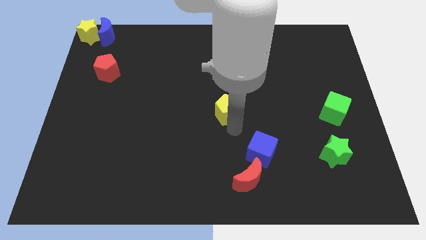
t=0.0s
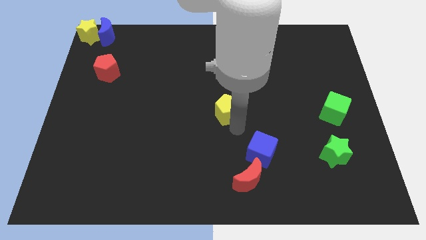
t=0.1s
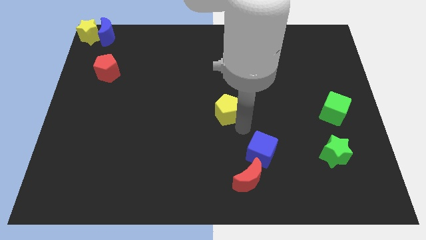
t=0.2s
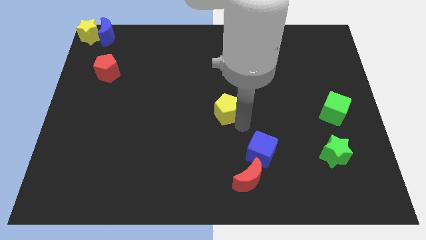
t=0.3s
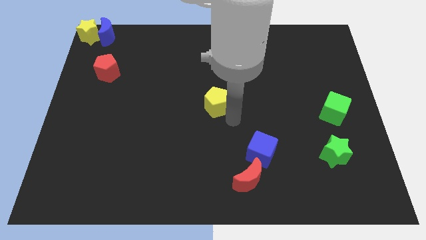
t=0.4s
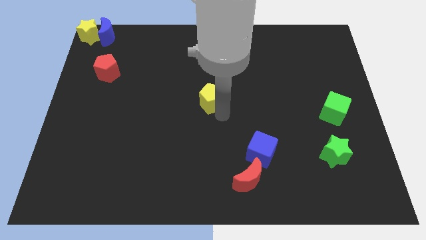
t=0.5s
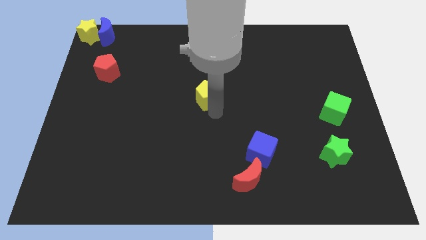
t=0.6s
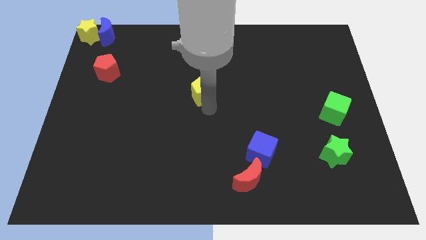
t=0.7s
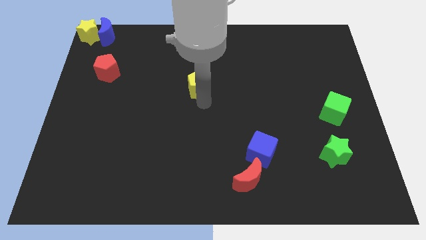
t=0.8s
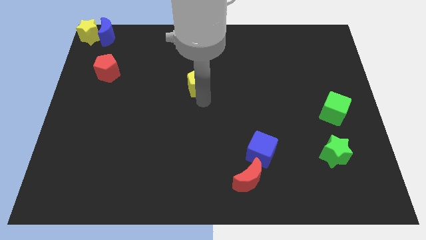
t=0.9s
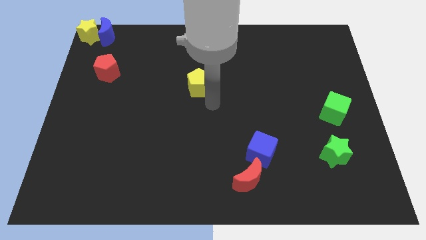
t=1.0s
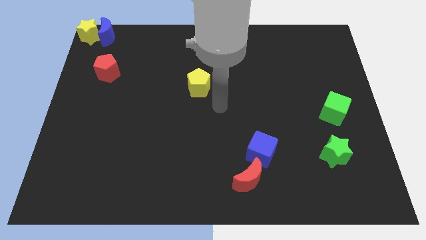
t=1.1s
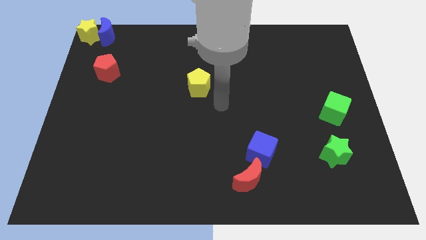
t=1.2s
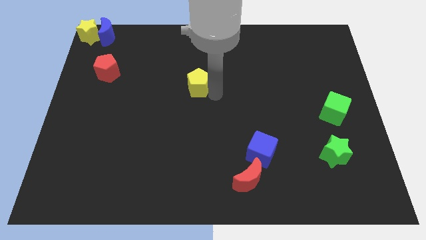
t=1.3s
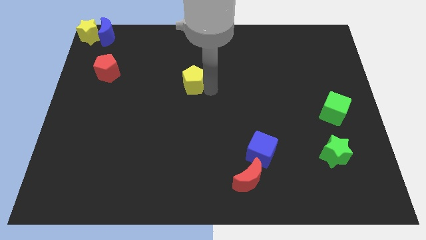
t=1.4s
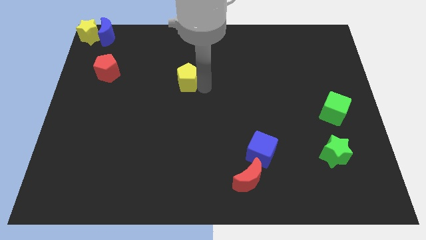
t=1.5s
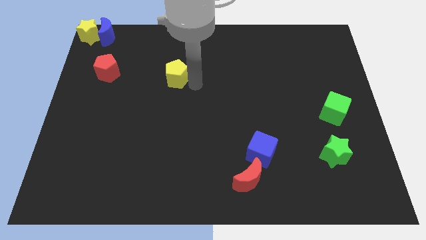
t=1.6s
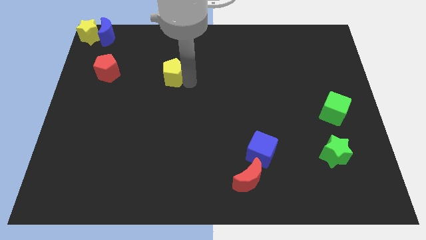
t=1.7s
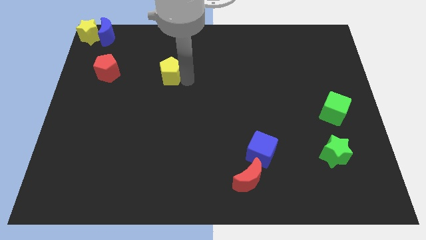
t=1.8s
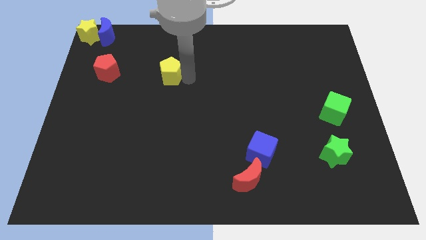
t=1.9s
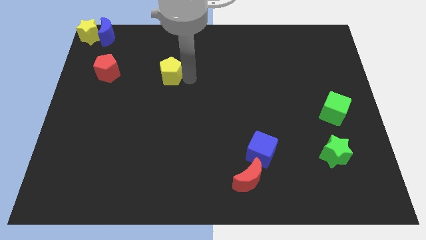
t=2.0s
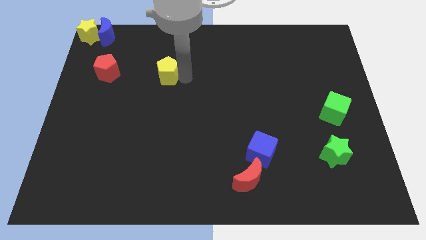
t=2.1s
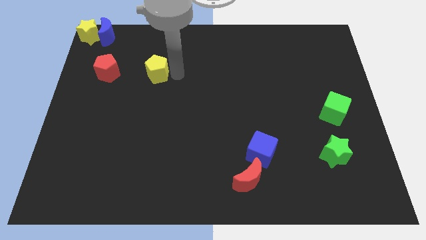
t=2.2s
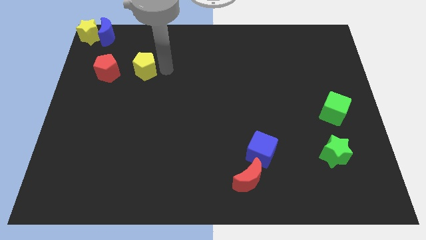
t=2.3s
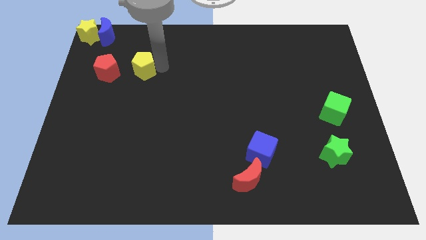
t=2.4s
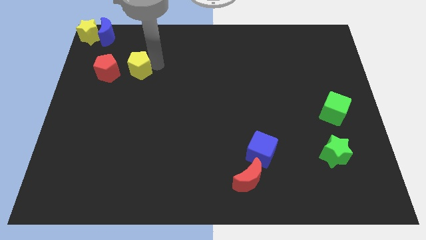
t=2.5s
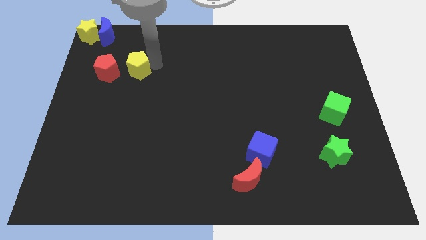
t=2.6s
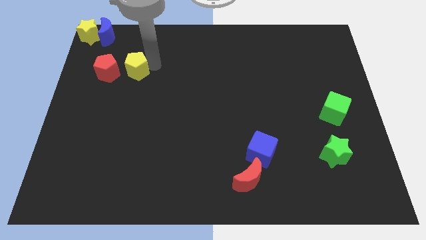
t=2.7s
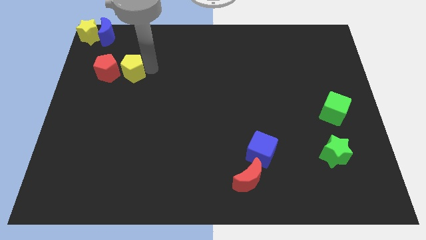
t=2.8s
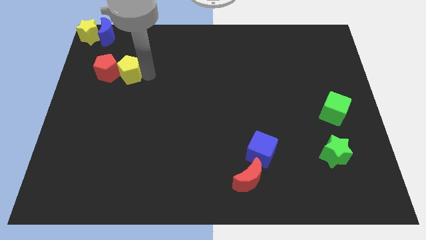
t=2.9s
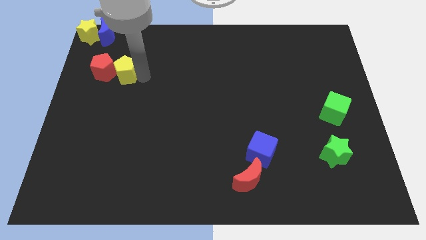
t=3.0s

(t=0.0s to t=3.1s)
move yellow pentagon into red pentagon

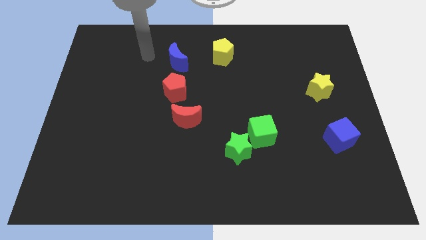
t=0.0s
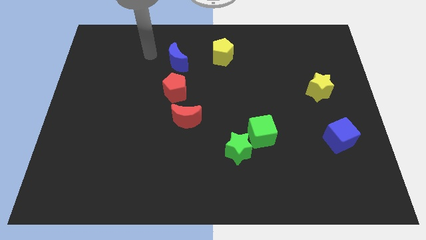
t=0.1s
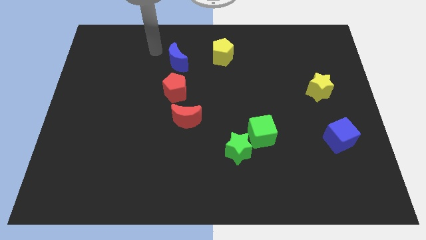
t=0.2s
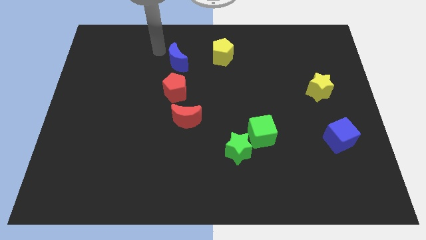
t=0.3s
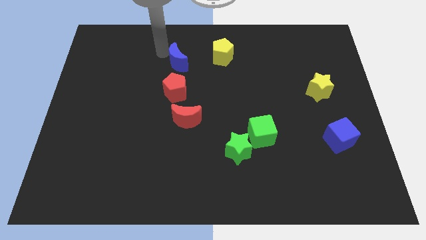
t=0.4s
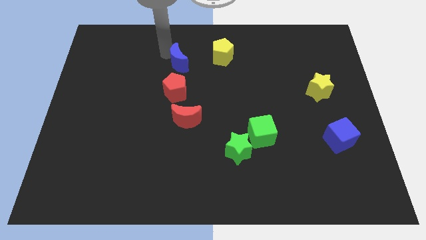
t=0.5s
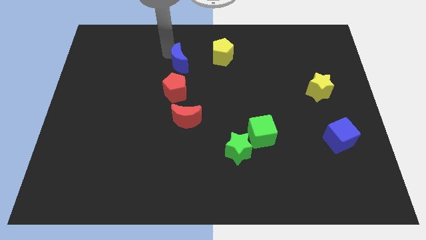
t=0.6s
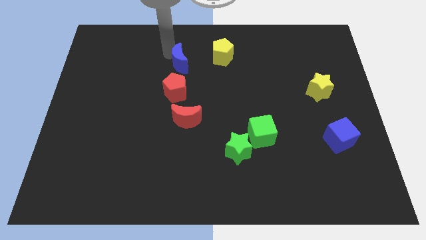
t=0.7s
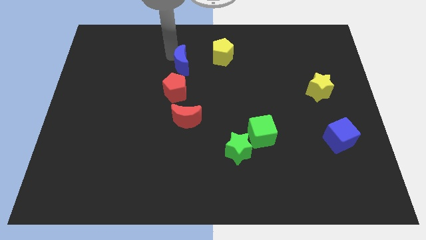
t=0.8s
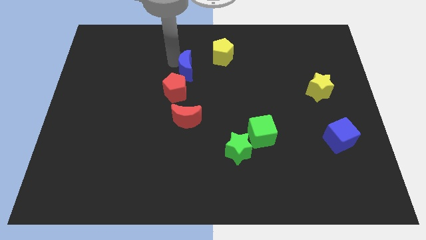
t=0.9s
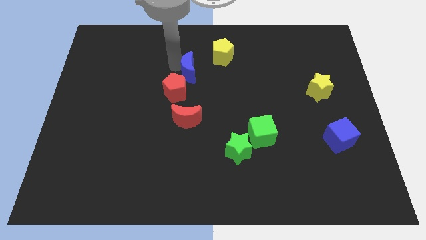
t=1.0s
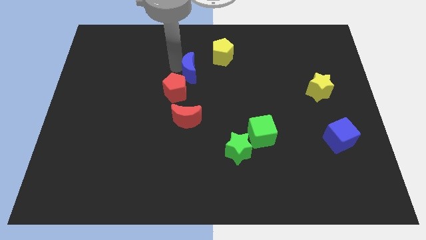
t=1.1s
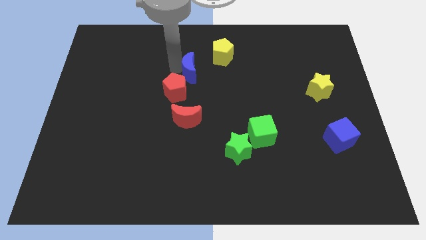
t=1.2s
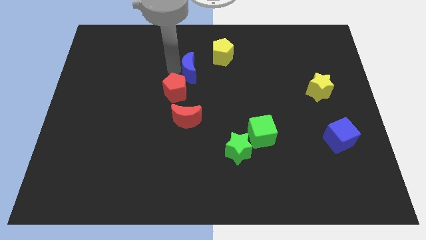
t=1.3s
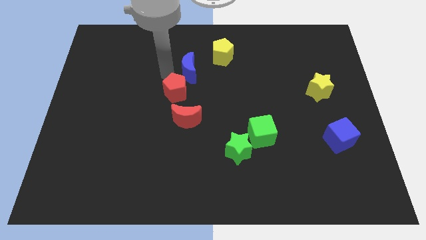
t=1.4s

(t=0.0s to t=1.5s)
push the blue crescent slightly downwards

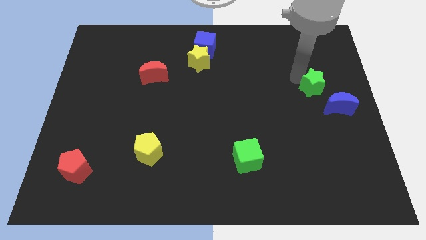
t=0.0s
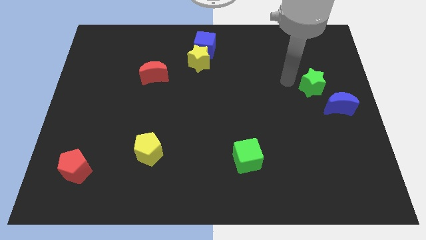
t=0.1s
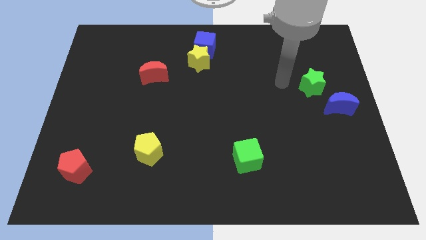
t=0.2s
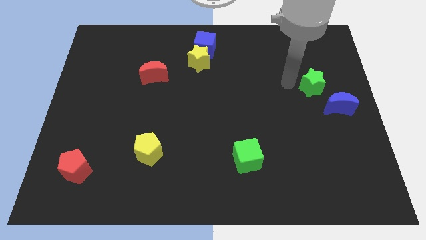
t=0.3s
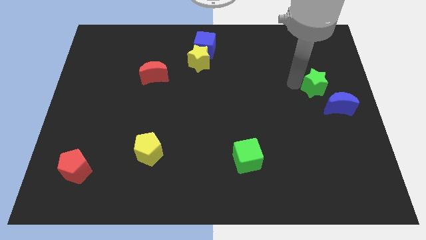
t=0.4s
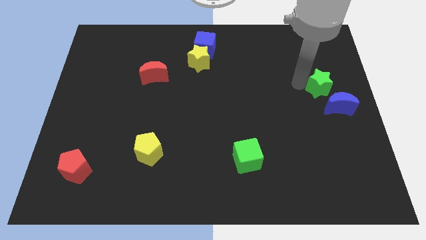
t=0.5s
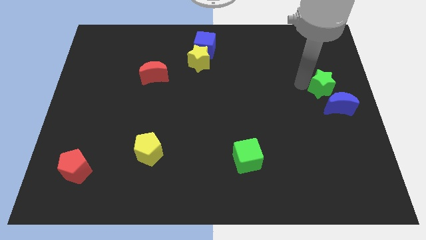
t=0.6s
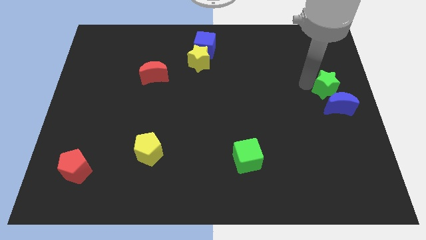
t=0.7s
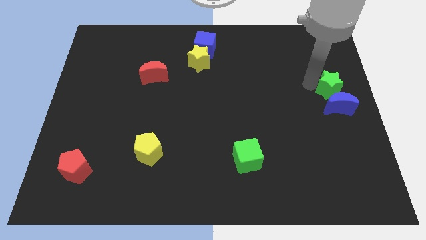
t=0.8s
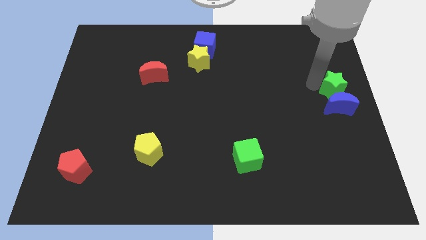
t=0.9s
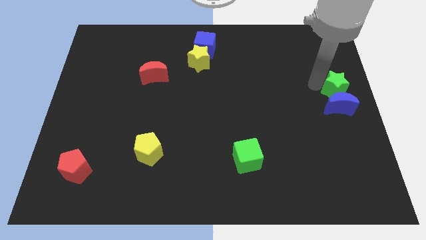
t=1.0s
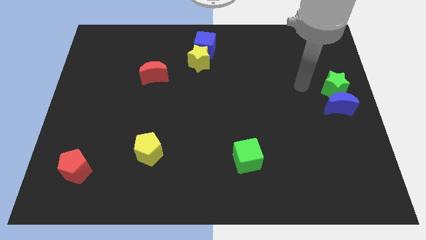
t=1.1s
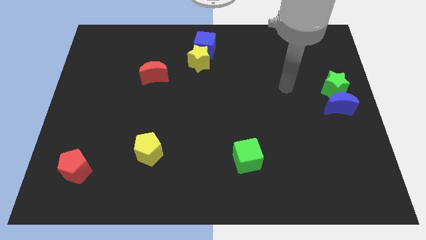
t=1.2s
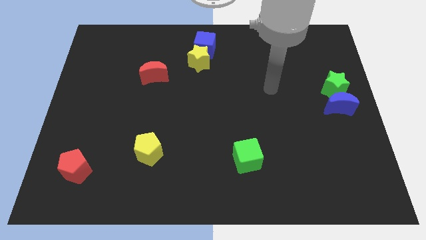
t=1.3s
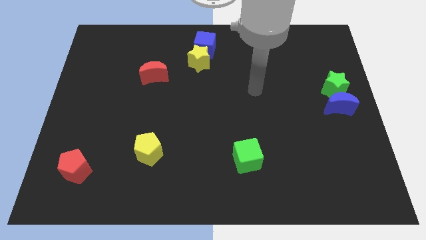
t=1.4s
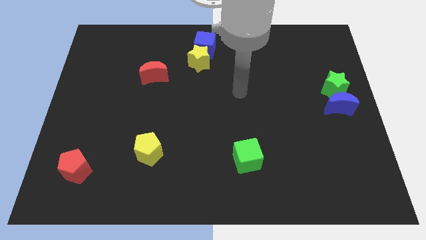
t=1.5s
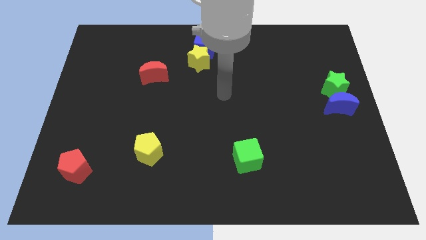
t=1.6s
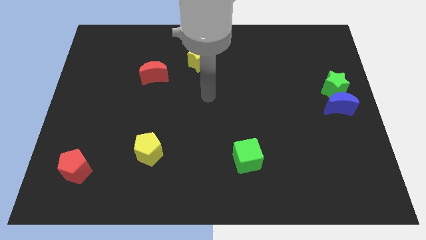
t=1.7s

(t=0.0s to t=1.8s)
move the green star above the blue moon

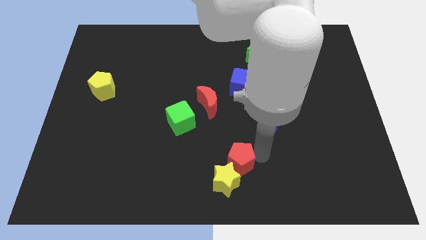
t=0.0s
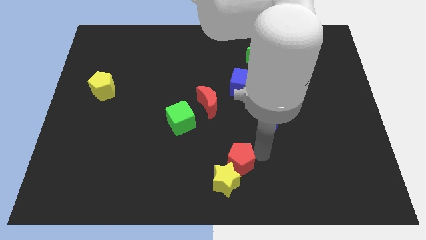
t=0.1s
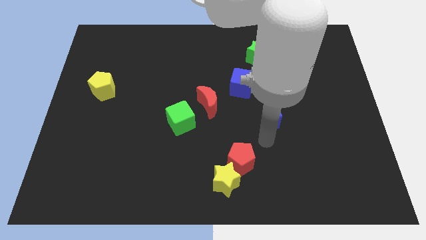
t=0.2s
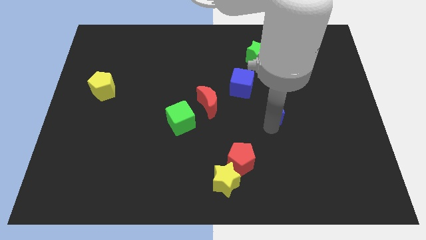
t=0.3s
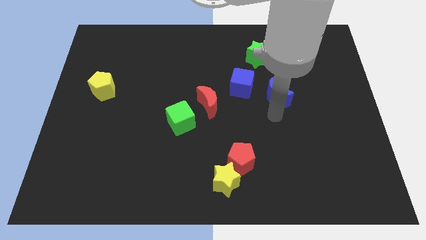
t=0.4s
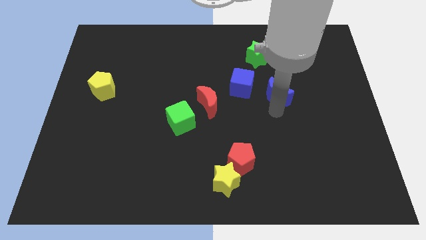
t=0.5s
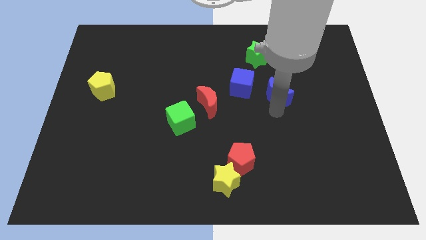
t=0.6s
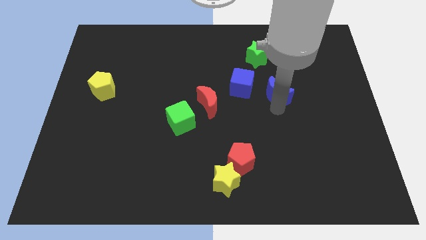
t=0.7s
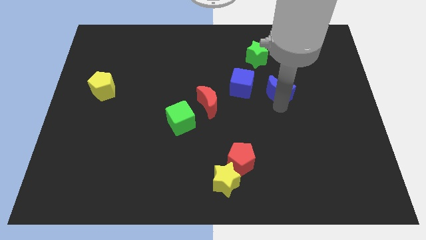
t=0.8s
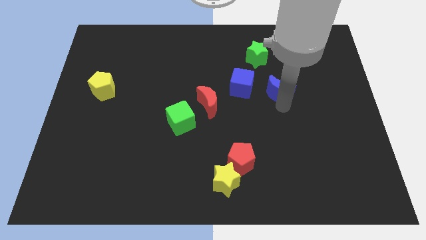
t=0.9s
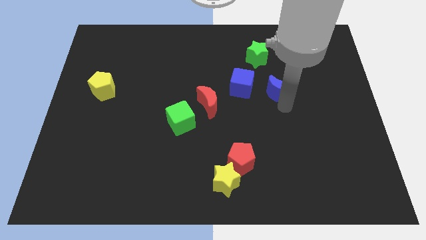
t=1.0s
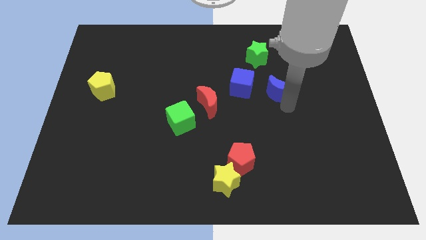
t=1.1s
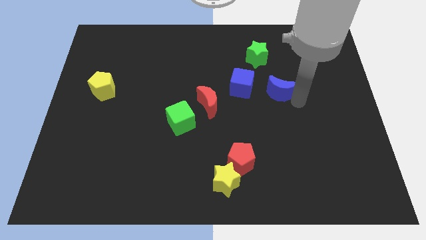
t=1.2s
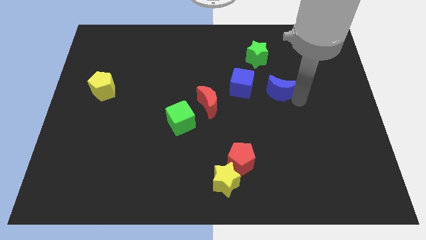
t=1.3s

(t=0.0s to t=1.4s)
move the blue crescent to the right side of the blue cube

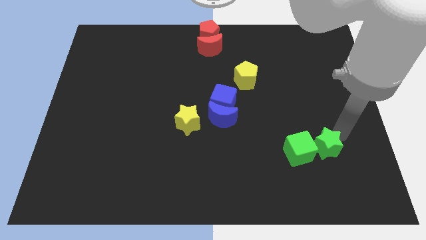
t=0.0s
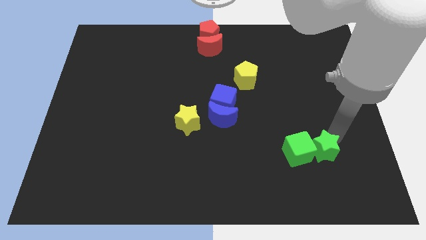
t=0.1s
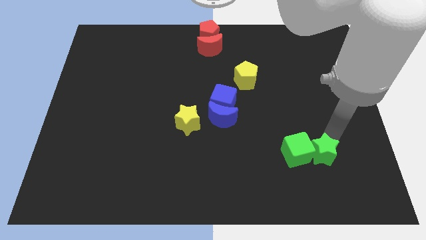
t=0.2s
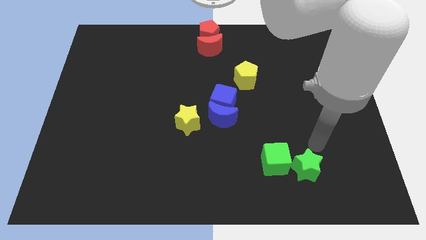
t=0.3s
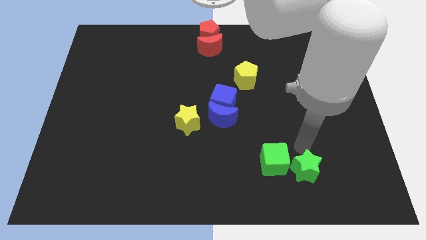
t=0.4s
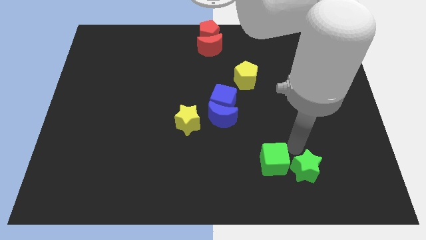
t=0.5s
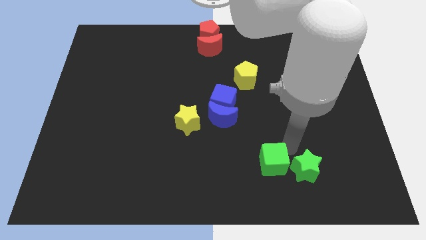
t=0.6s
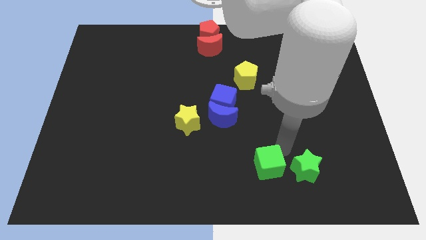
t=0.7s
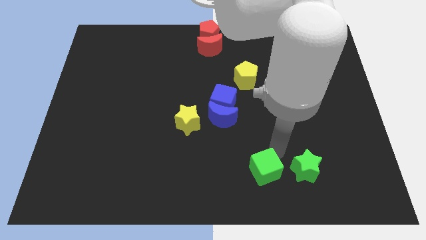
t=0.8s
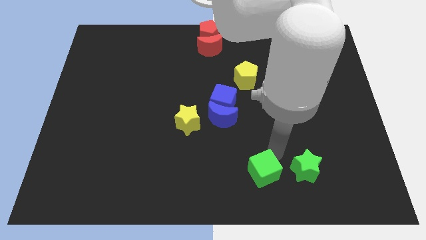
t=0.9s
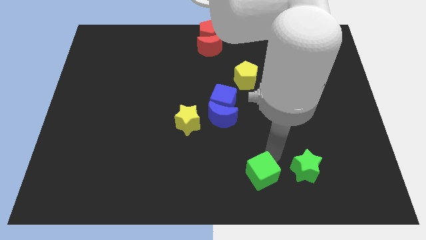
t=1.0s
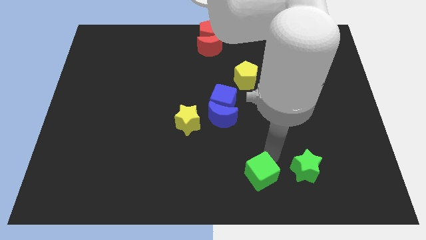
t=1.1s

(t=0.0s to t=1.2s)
separate green cube from the green star
